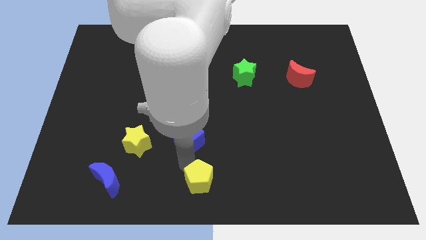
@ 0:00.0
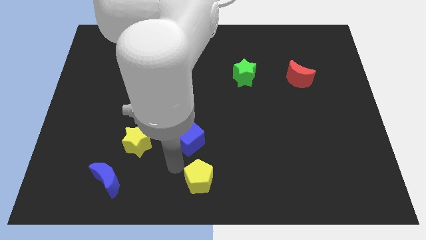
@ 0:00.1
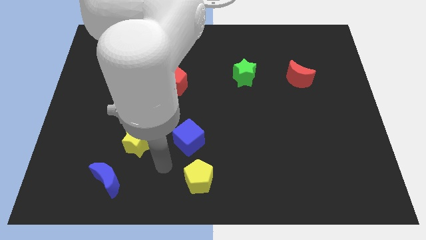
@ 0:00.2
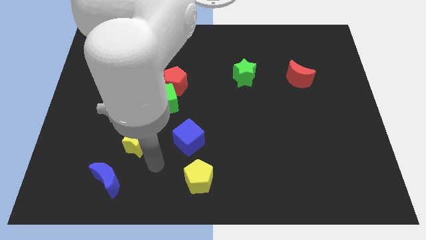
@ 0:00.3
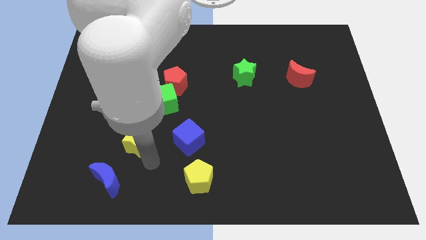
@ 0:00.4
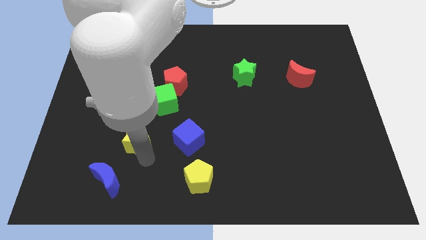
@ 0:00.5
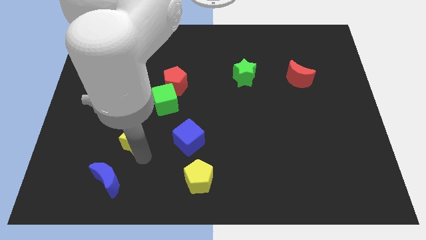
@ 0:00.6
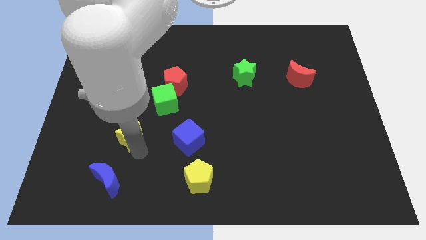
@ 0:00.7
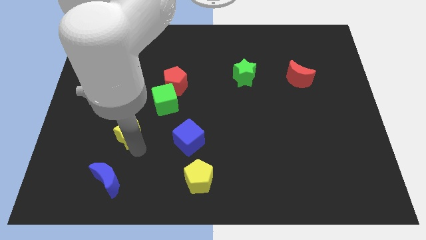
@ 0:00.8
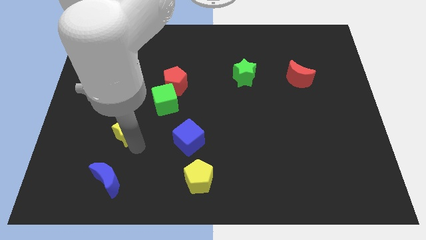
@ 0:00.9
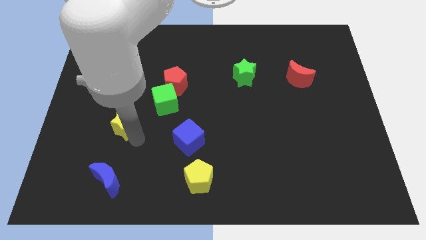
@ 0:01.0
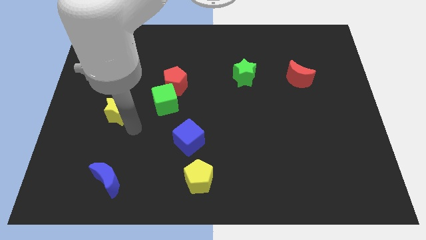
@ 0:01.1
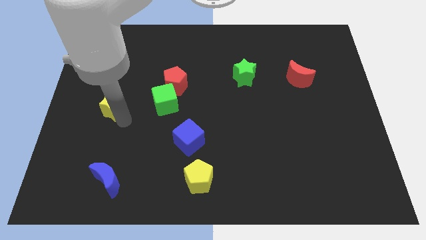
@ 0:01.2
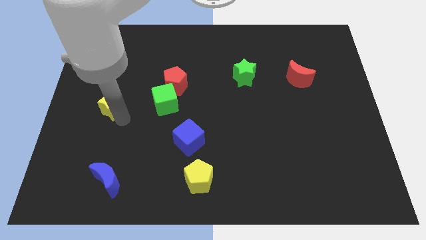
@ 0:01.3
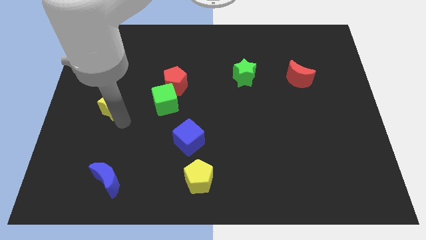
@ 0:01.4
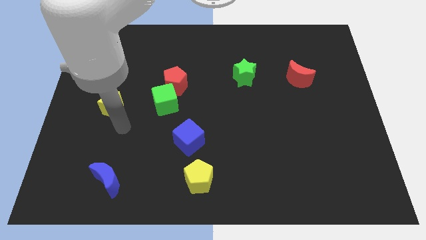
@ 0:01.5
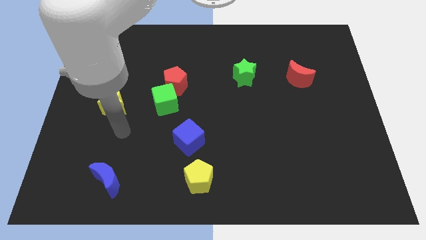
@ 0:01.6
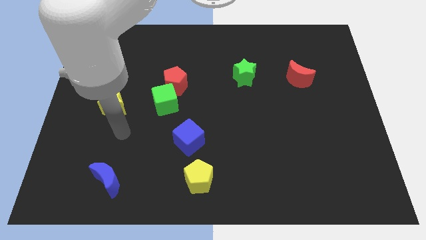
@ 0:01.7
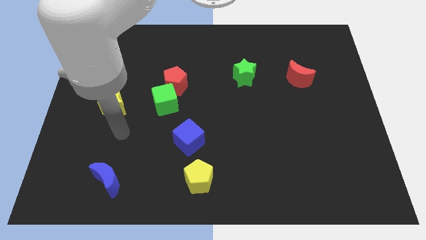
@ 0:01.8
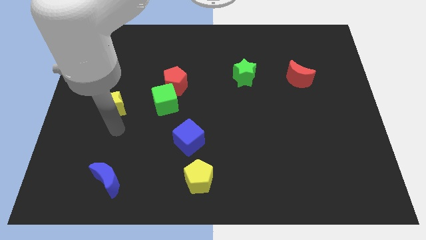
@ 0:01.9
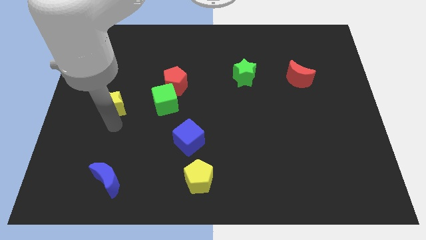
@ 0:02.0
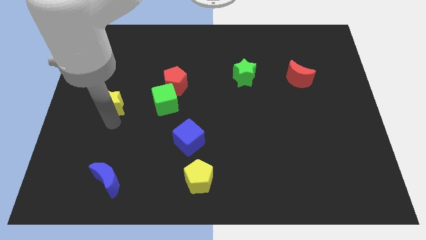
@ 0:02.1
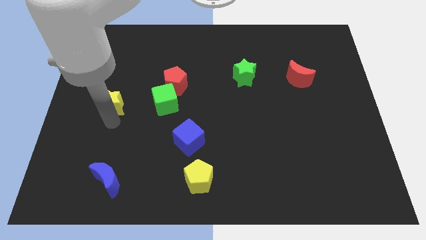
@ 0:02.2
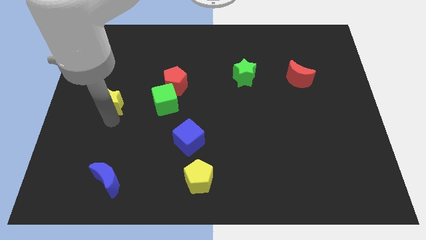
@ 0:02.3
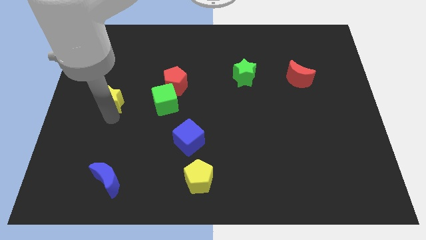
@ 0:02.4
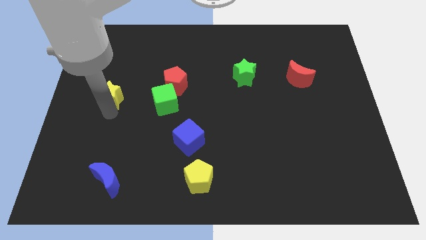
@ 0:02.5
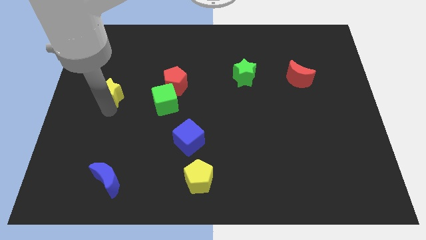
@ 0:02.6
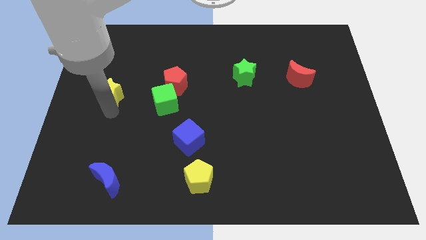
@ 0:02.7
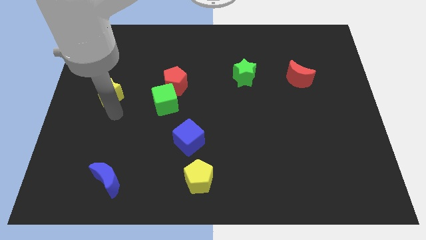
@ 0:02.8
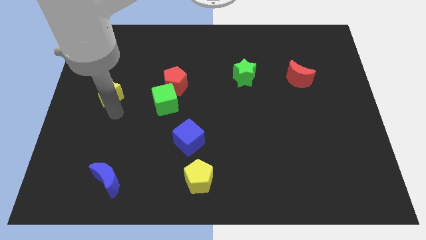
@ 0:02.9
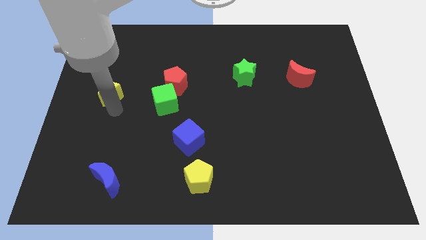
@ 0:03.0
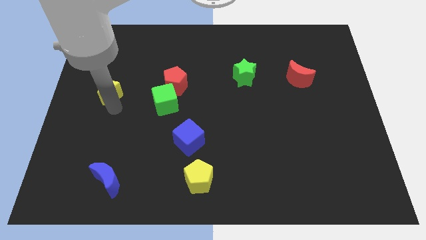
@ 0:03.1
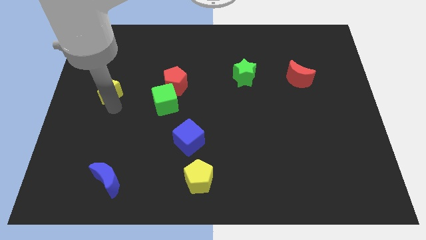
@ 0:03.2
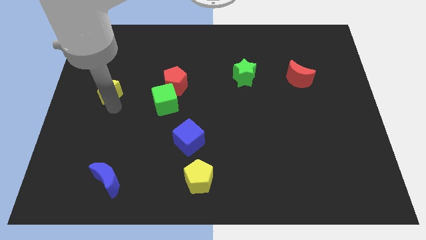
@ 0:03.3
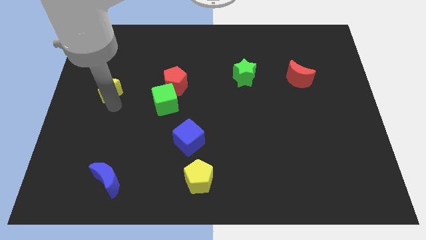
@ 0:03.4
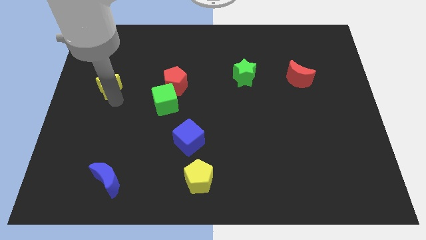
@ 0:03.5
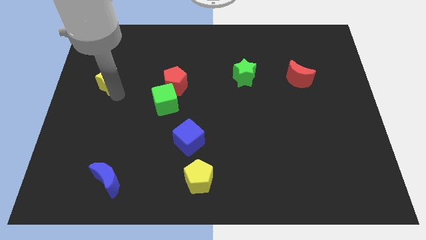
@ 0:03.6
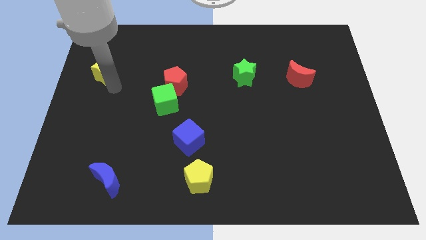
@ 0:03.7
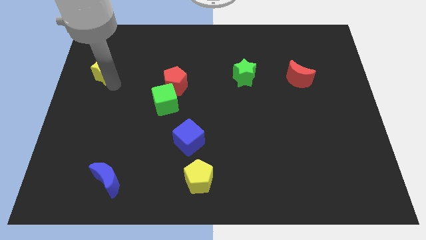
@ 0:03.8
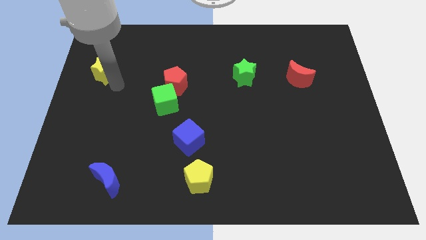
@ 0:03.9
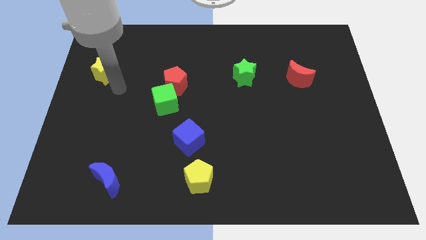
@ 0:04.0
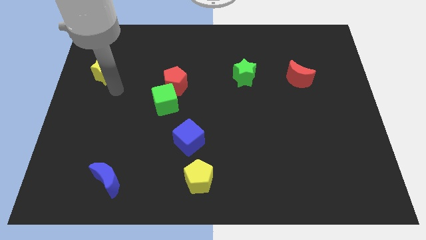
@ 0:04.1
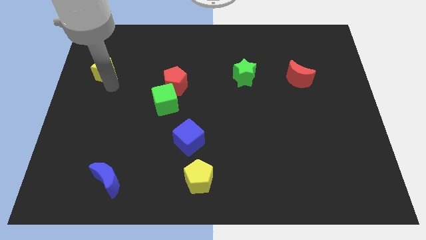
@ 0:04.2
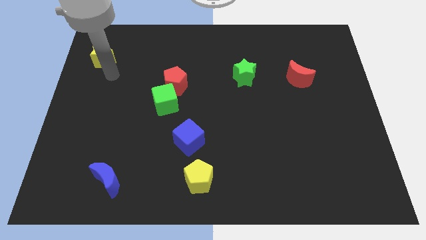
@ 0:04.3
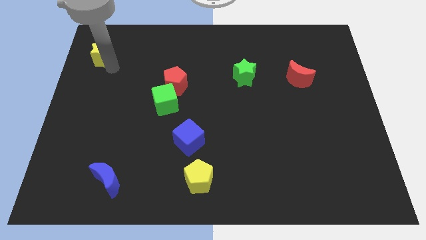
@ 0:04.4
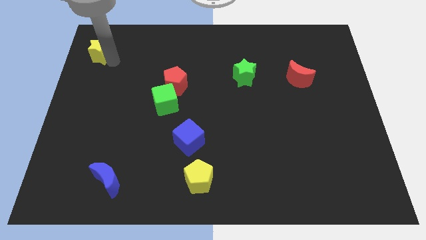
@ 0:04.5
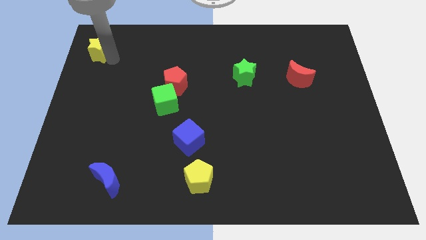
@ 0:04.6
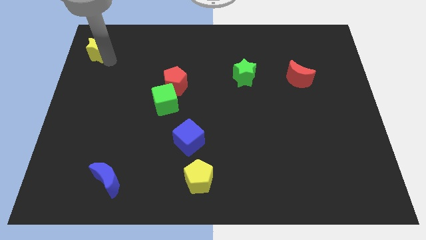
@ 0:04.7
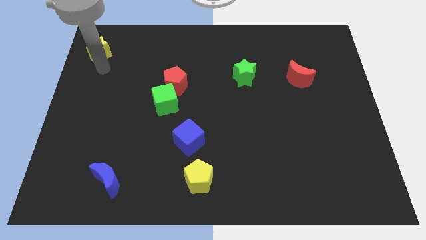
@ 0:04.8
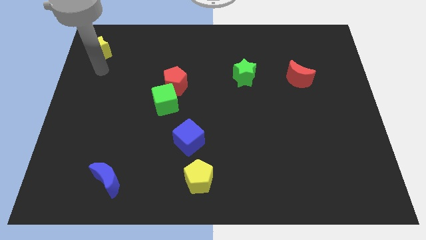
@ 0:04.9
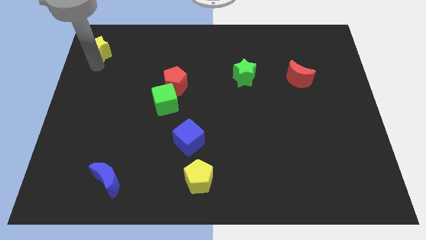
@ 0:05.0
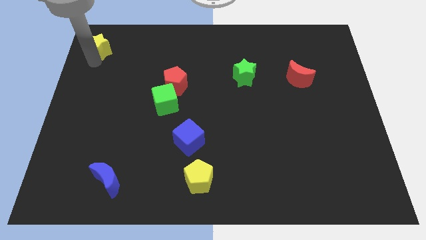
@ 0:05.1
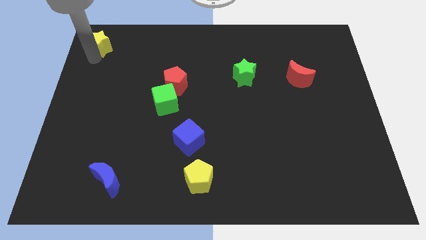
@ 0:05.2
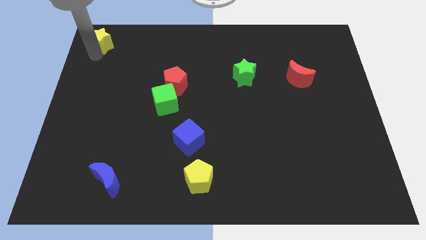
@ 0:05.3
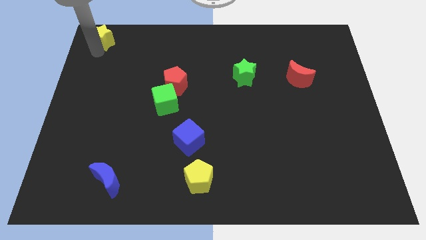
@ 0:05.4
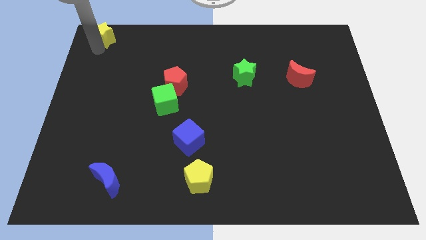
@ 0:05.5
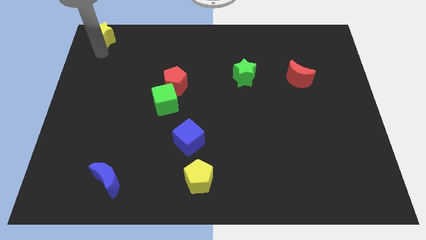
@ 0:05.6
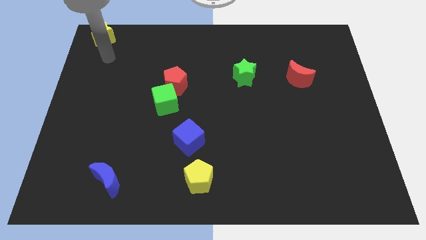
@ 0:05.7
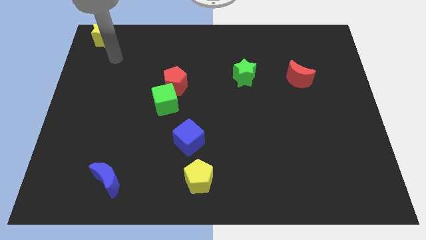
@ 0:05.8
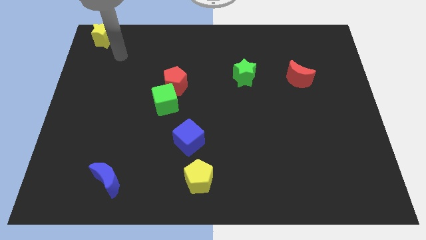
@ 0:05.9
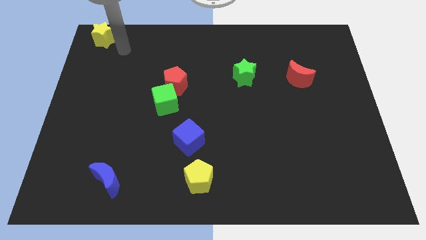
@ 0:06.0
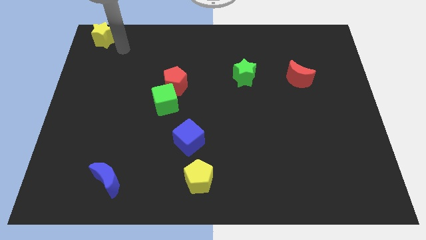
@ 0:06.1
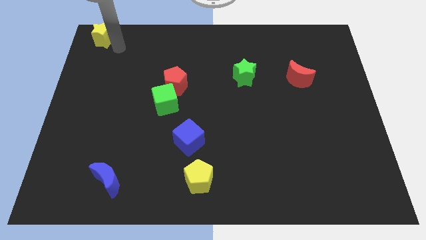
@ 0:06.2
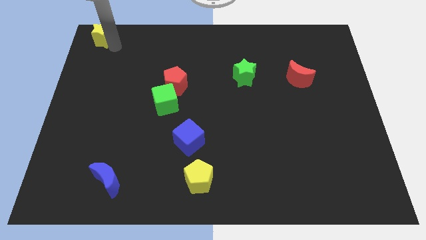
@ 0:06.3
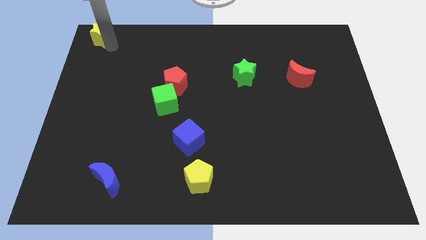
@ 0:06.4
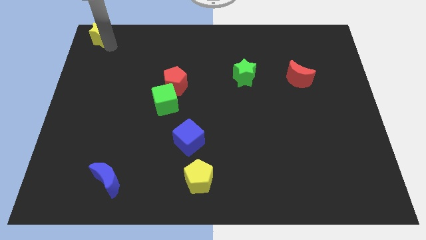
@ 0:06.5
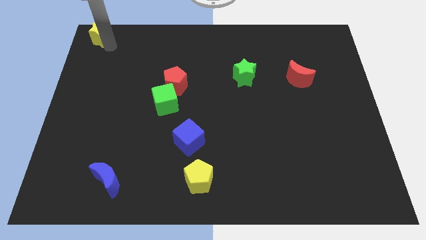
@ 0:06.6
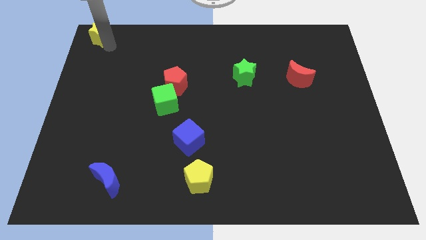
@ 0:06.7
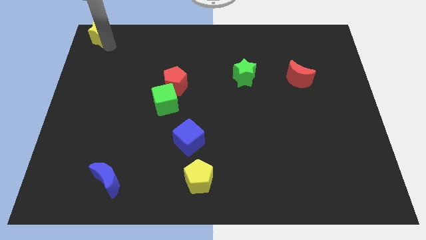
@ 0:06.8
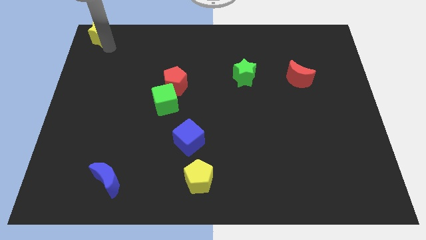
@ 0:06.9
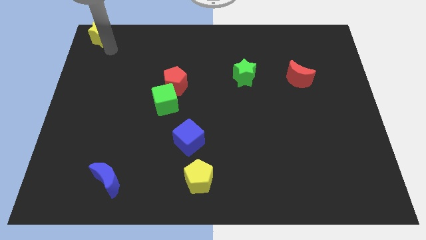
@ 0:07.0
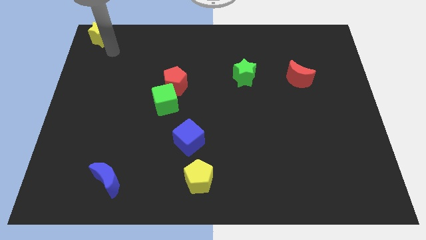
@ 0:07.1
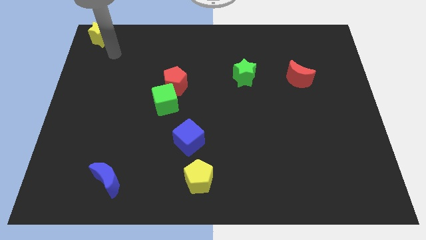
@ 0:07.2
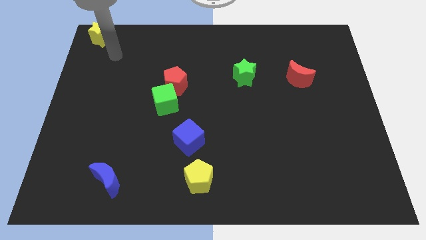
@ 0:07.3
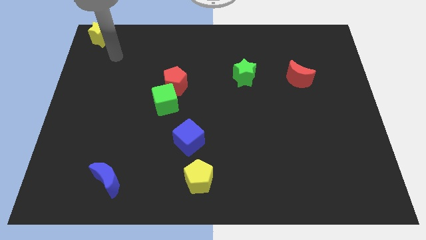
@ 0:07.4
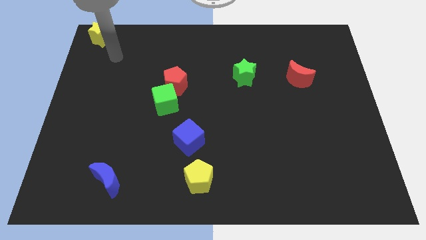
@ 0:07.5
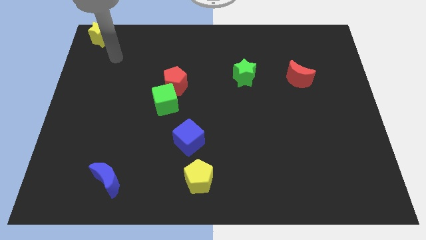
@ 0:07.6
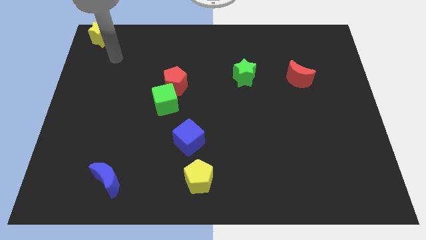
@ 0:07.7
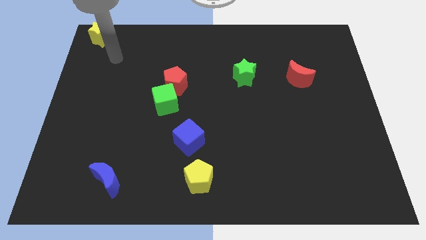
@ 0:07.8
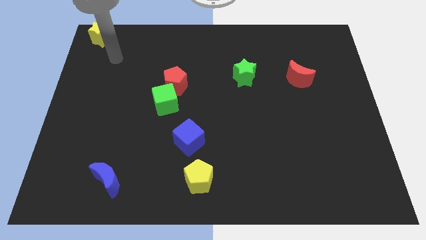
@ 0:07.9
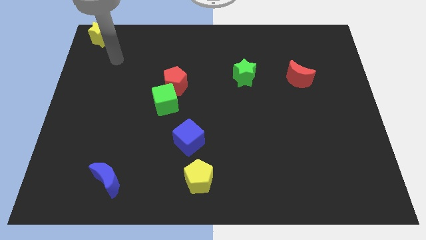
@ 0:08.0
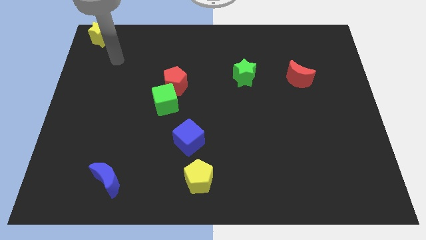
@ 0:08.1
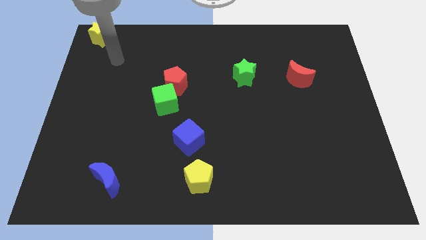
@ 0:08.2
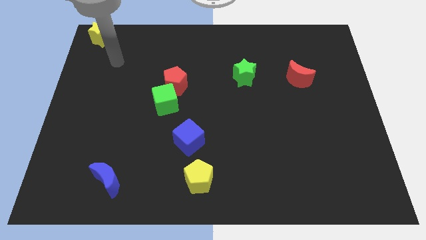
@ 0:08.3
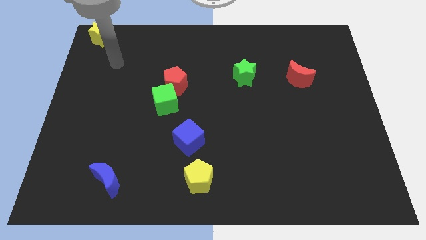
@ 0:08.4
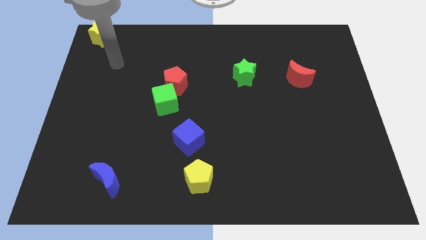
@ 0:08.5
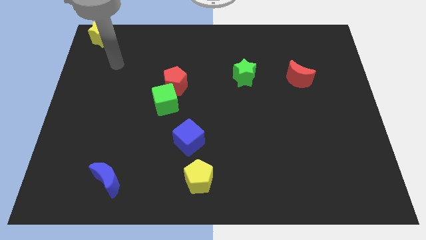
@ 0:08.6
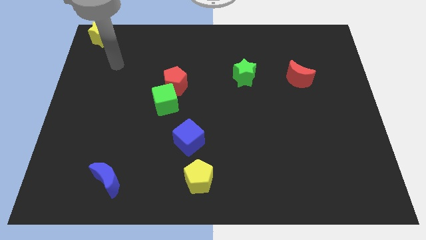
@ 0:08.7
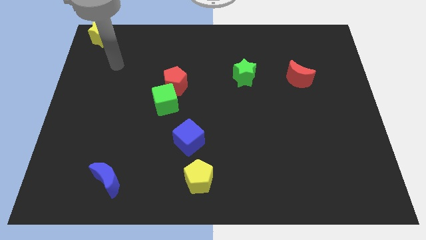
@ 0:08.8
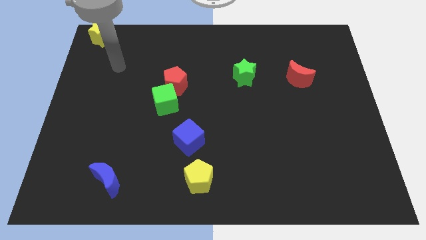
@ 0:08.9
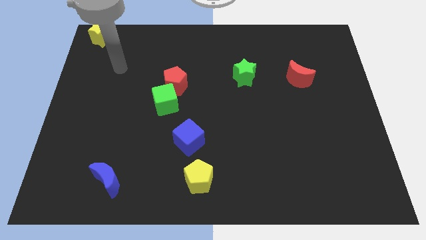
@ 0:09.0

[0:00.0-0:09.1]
move yellow star to the top left

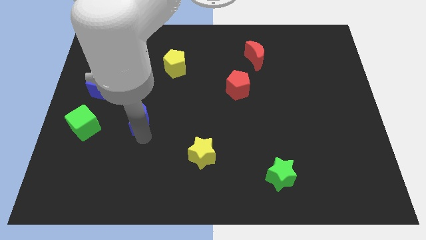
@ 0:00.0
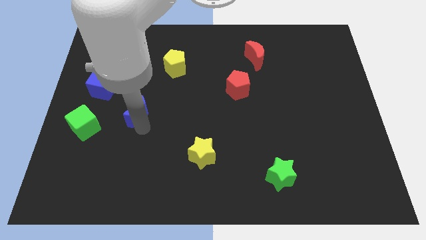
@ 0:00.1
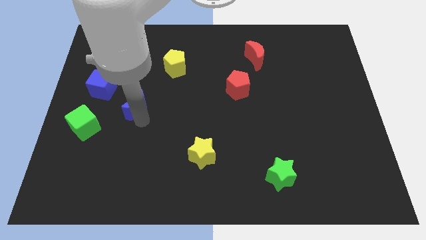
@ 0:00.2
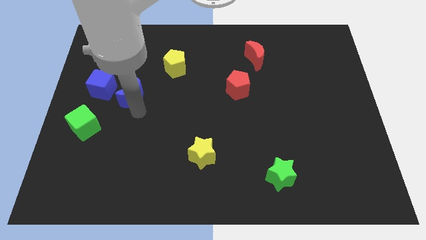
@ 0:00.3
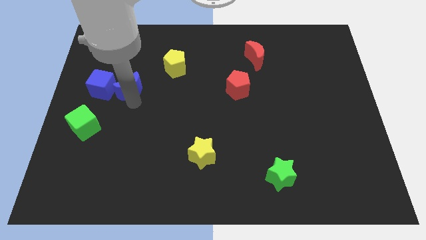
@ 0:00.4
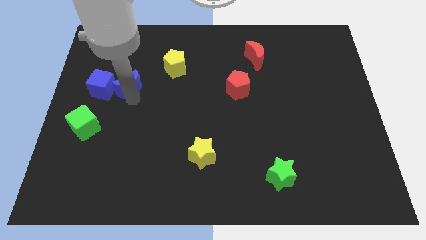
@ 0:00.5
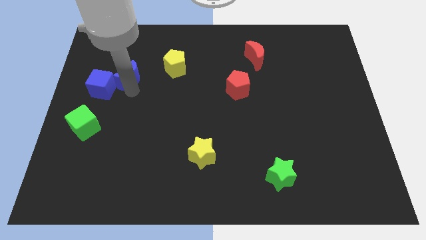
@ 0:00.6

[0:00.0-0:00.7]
move the blue crescent into the blue cube
